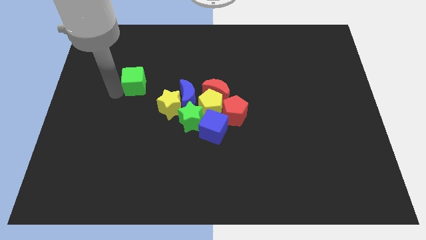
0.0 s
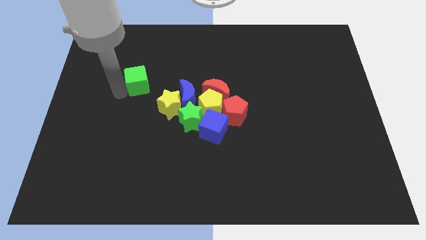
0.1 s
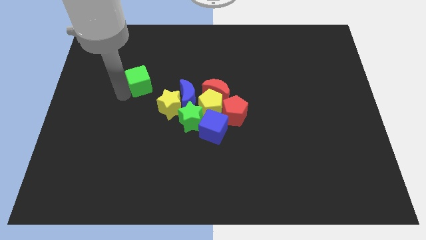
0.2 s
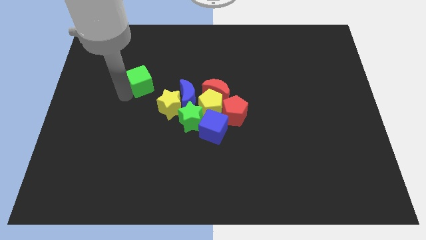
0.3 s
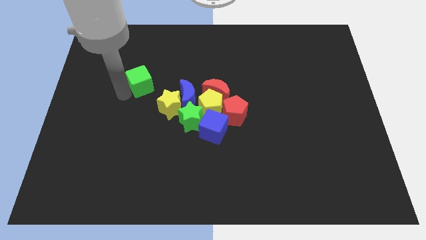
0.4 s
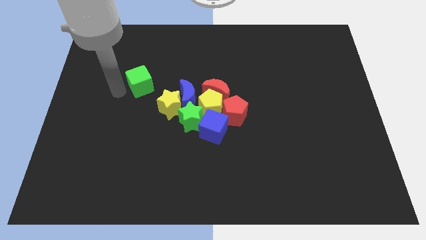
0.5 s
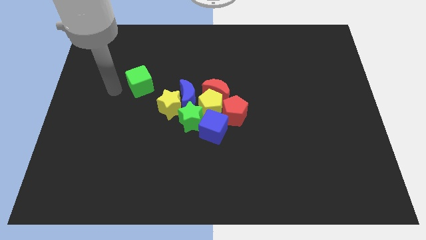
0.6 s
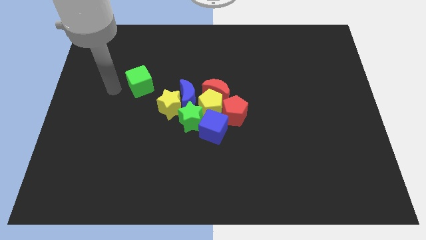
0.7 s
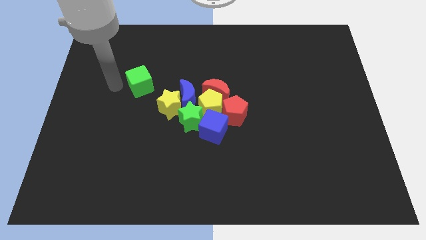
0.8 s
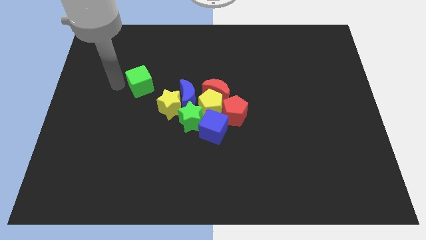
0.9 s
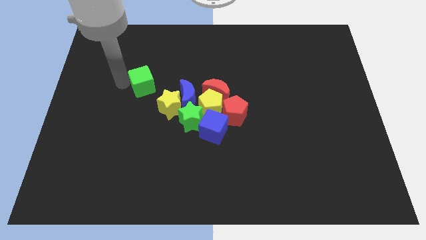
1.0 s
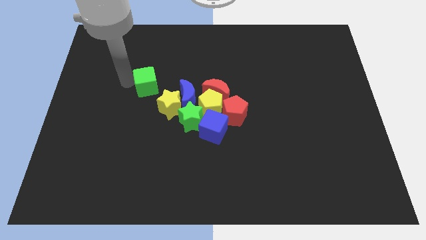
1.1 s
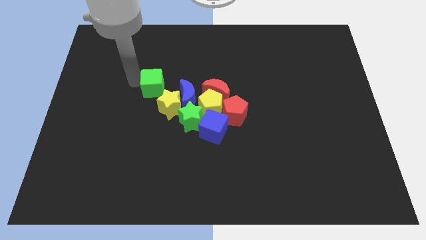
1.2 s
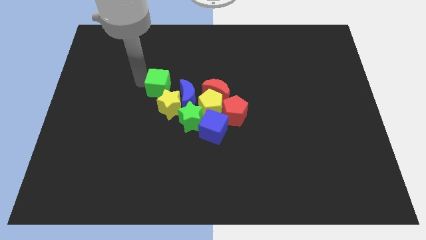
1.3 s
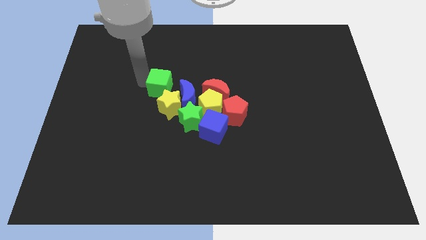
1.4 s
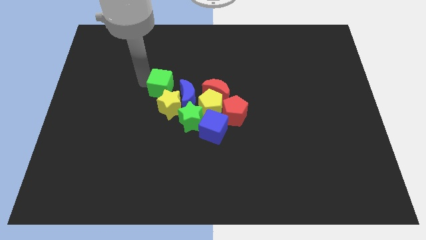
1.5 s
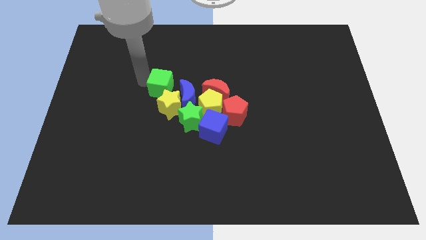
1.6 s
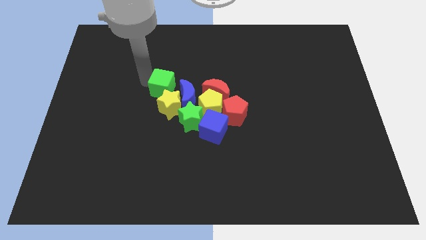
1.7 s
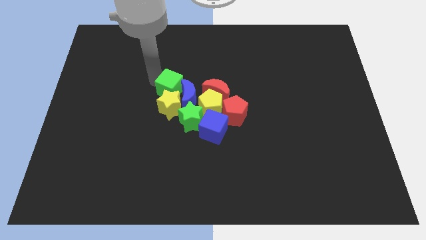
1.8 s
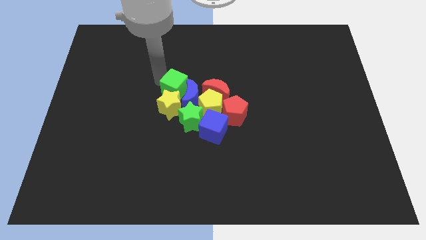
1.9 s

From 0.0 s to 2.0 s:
push the green cube to the top of the yellow star

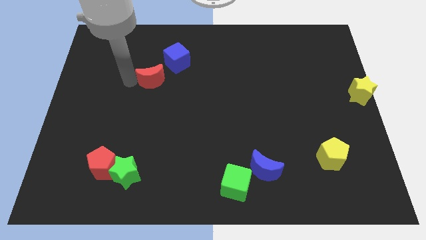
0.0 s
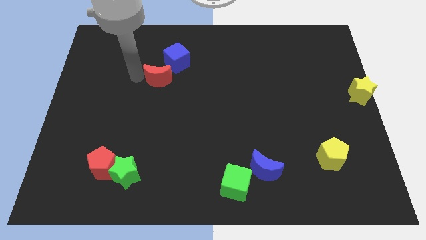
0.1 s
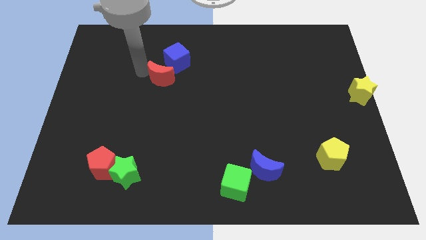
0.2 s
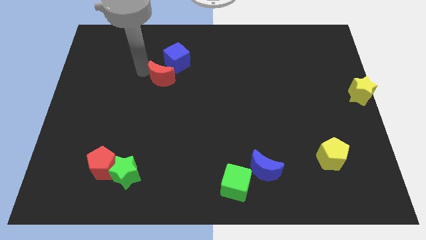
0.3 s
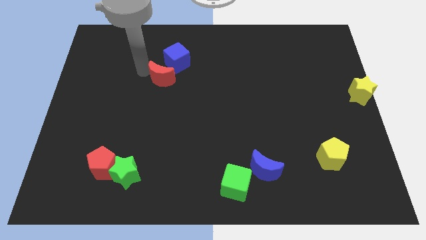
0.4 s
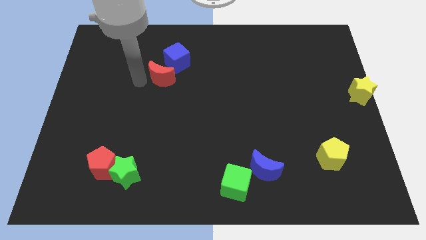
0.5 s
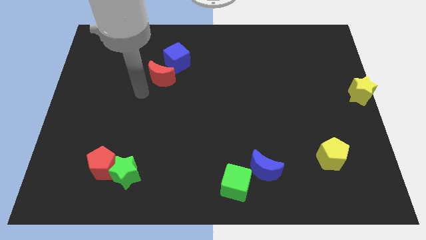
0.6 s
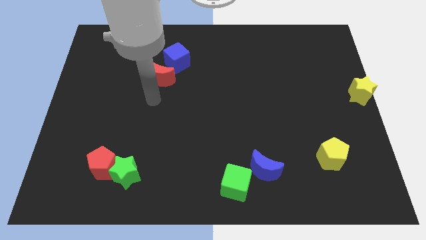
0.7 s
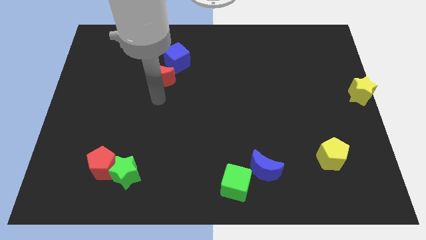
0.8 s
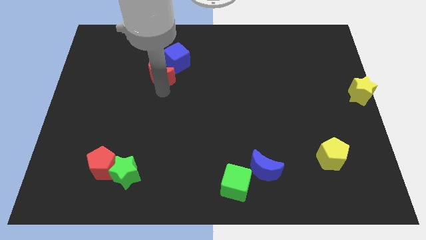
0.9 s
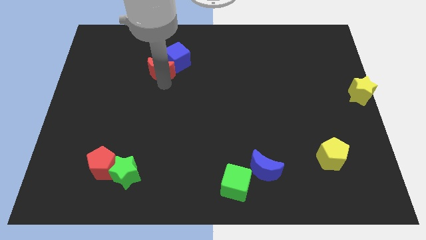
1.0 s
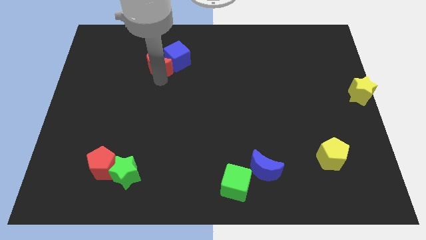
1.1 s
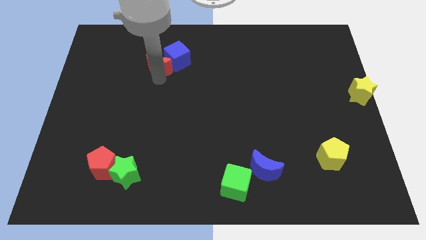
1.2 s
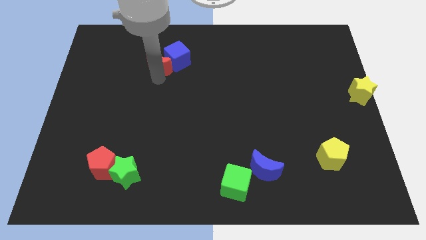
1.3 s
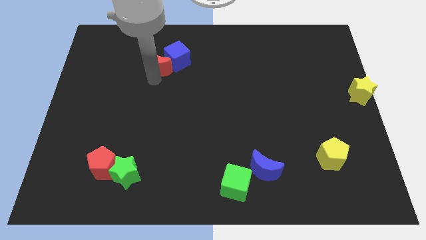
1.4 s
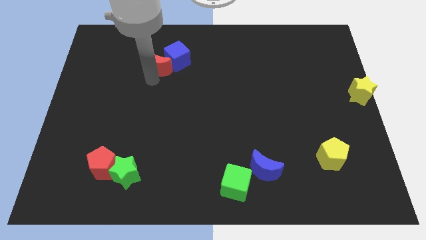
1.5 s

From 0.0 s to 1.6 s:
push the red crescent into the blue cube

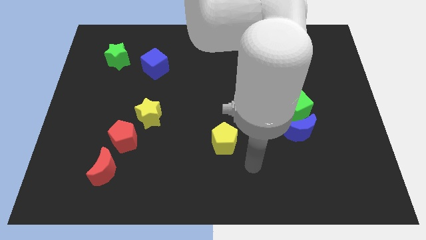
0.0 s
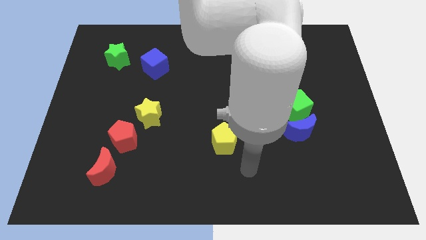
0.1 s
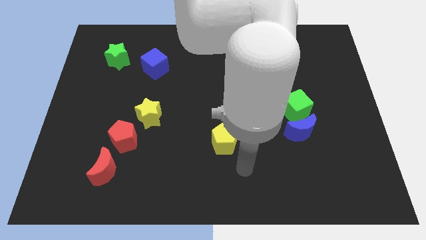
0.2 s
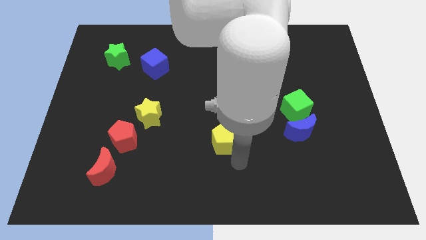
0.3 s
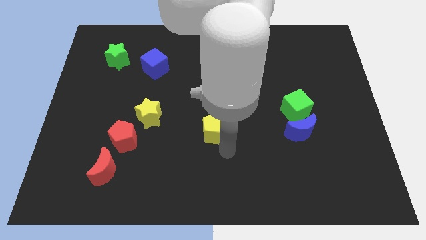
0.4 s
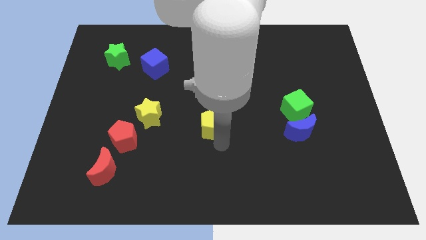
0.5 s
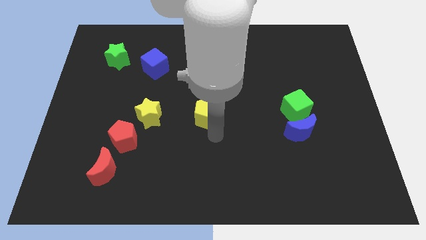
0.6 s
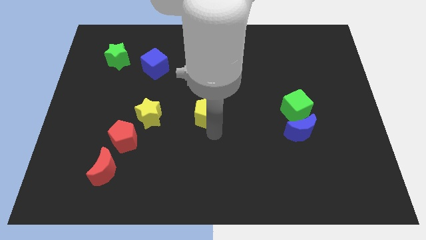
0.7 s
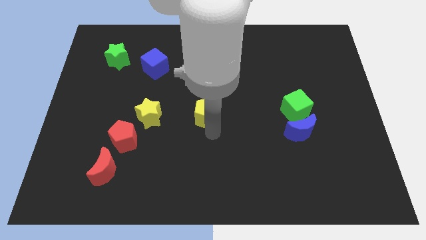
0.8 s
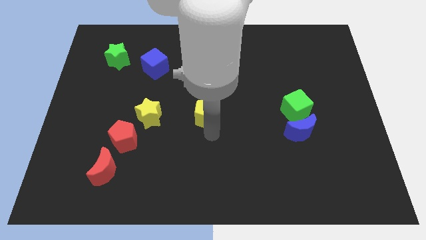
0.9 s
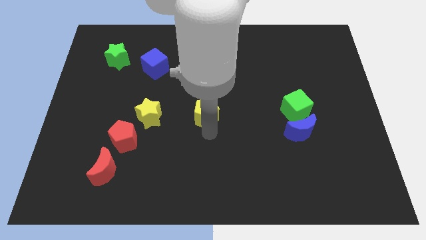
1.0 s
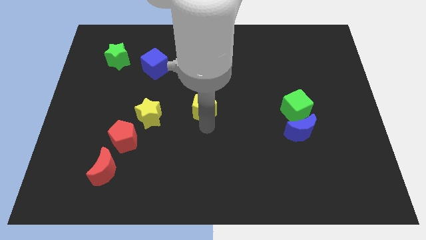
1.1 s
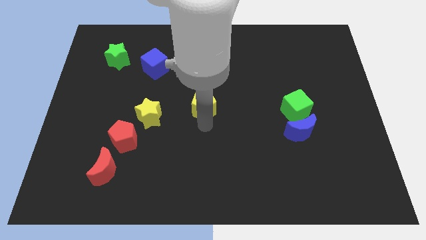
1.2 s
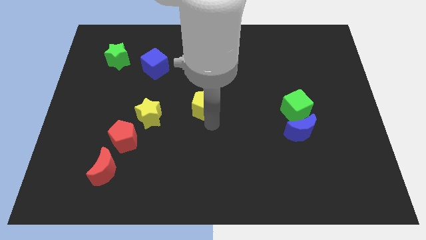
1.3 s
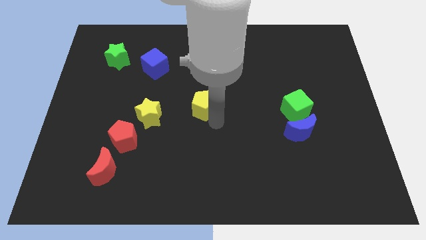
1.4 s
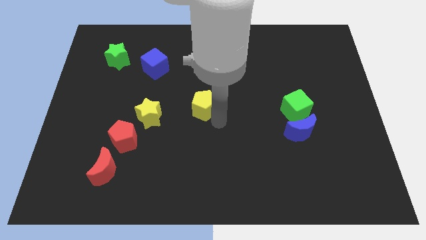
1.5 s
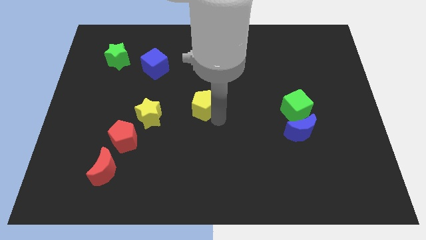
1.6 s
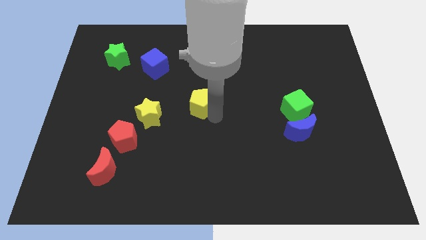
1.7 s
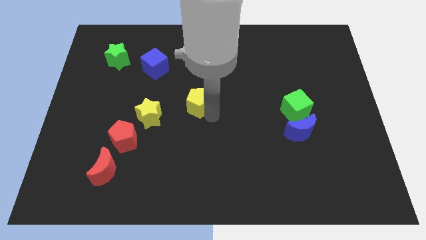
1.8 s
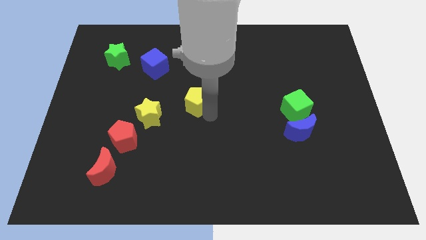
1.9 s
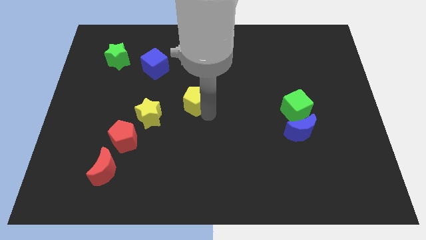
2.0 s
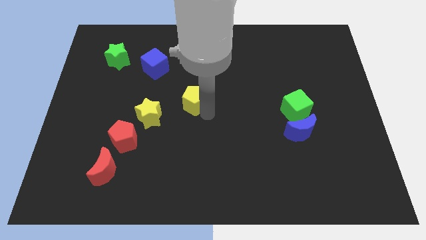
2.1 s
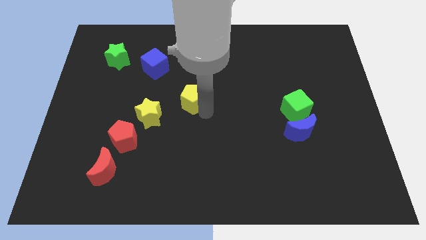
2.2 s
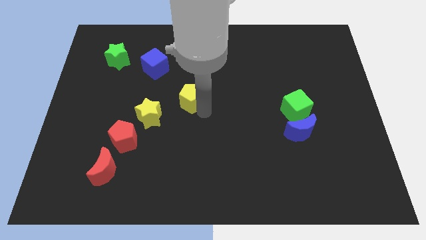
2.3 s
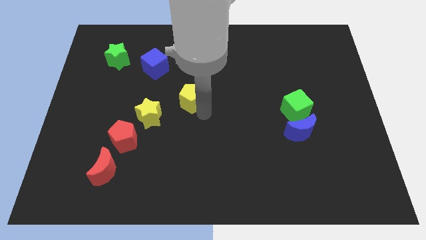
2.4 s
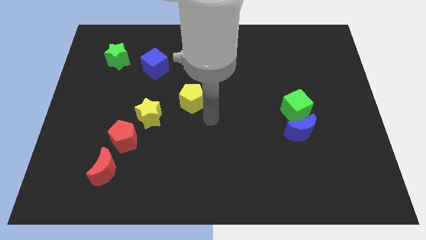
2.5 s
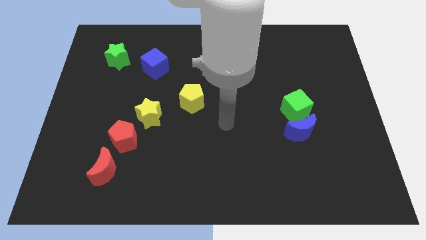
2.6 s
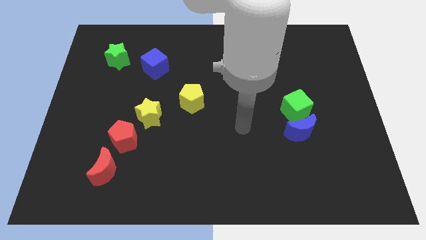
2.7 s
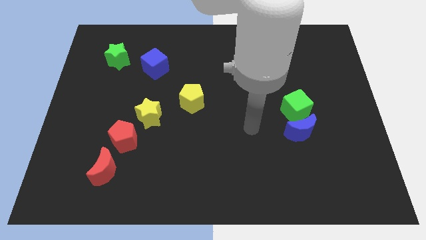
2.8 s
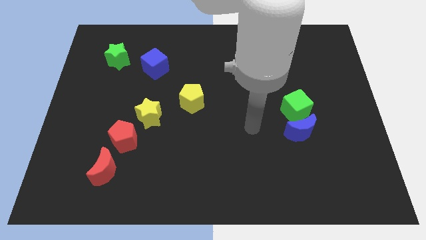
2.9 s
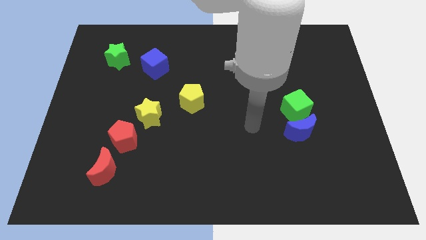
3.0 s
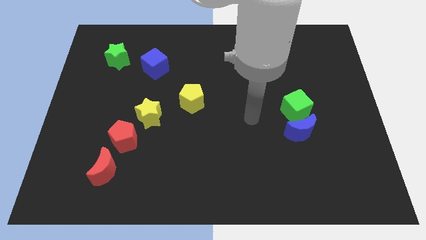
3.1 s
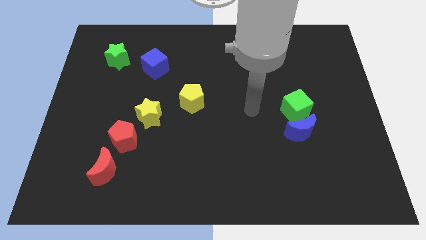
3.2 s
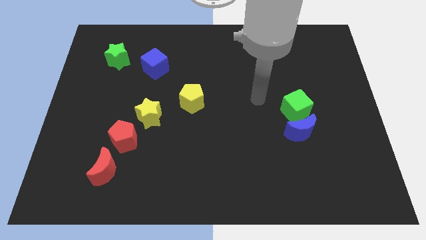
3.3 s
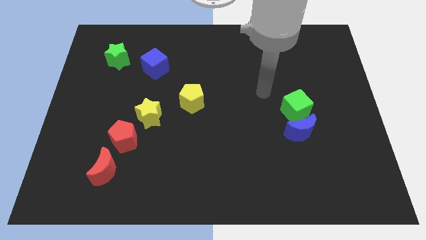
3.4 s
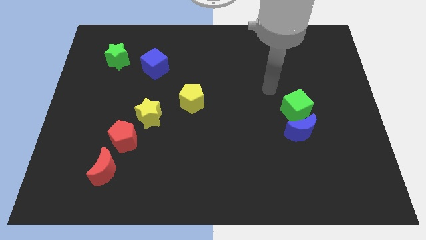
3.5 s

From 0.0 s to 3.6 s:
move the yellow pentagon diagonally to blue cube

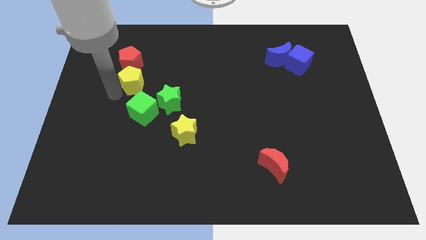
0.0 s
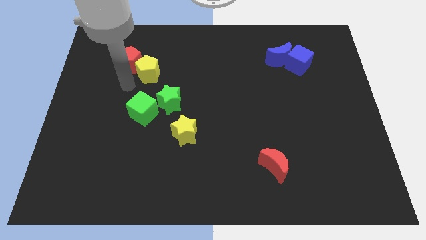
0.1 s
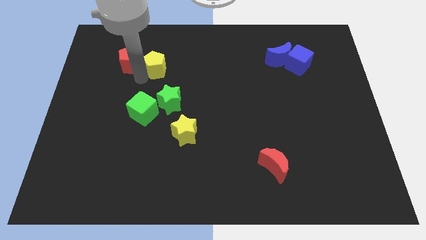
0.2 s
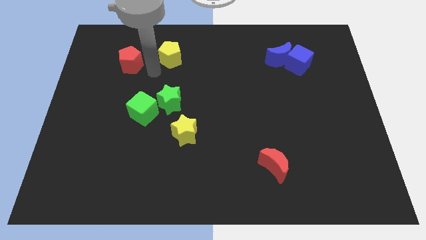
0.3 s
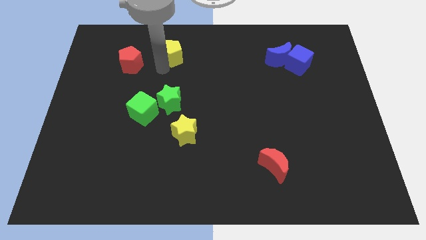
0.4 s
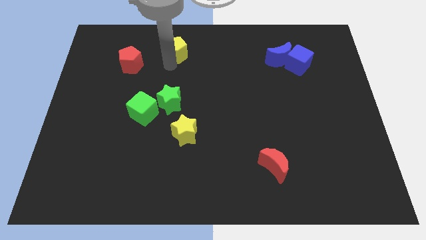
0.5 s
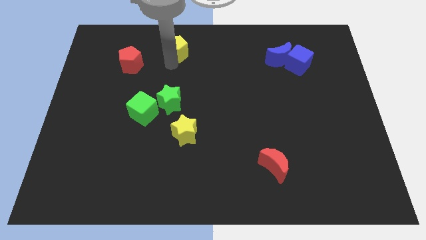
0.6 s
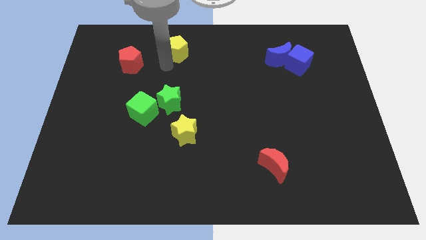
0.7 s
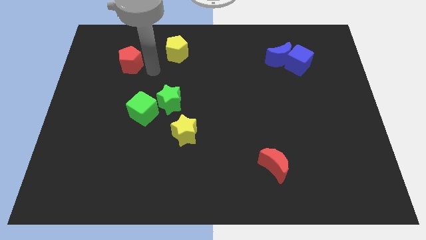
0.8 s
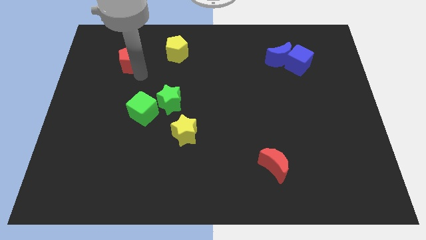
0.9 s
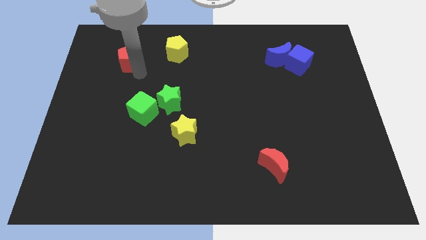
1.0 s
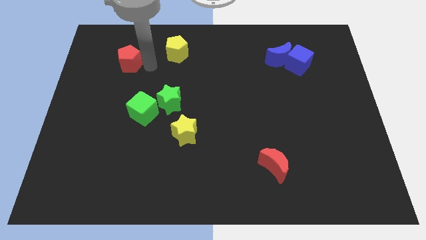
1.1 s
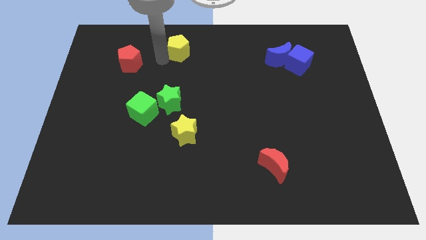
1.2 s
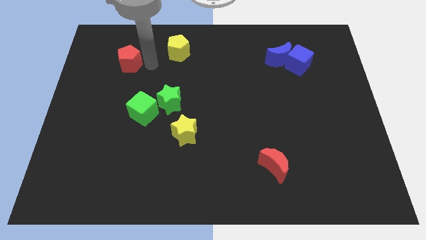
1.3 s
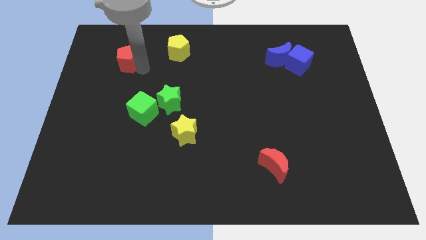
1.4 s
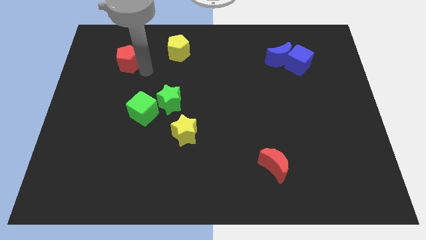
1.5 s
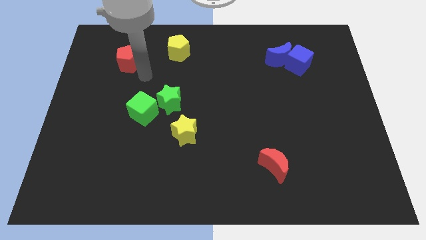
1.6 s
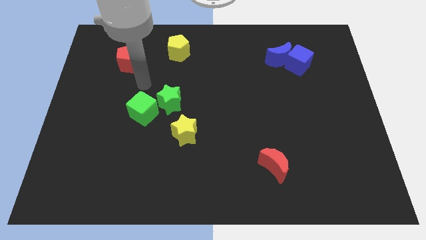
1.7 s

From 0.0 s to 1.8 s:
apart yellow and red pentagons
